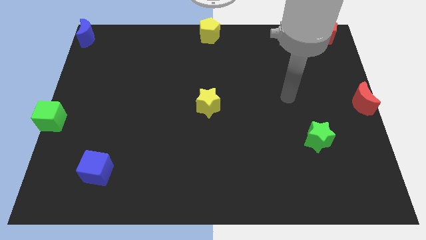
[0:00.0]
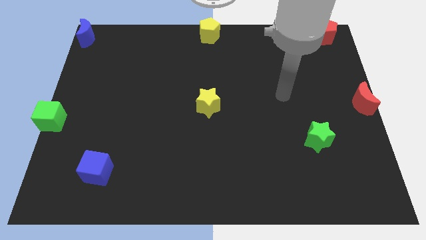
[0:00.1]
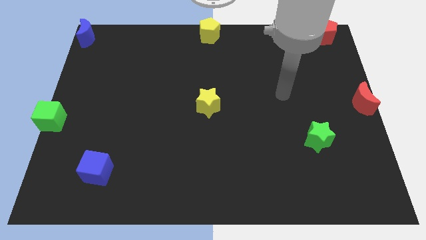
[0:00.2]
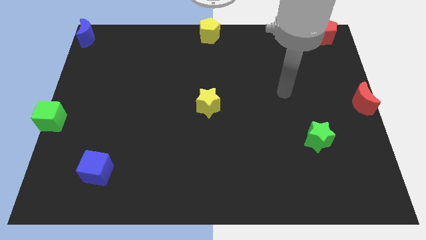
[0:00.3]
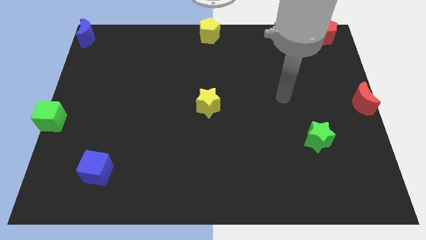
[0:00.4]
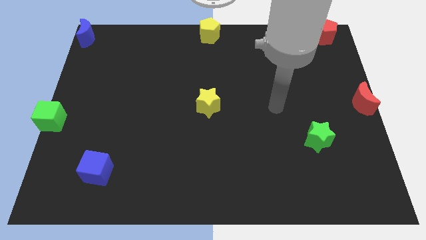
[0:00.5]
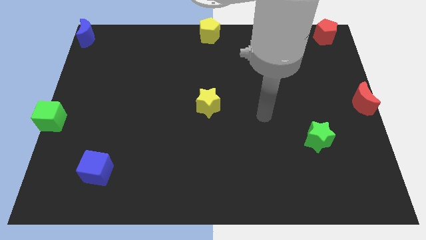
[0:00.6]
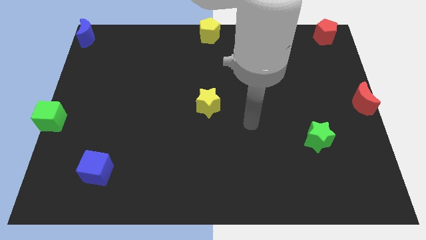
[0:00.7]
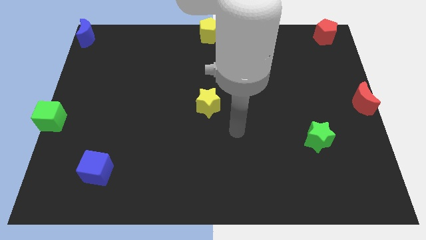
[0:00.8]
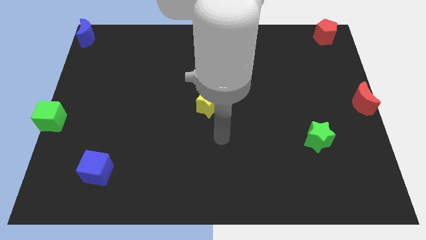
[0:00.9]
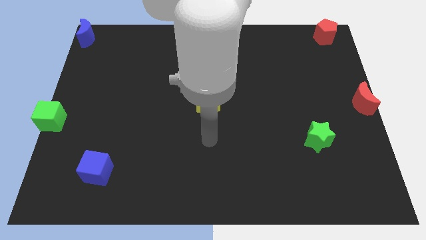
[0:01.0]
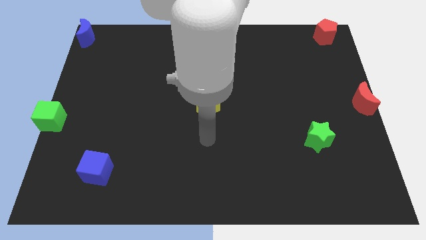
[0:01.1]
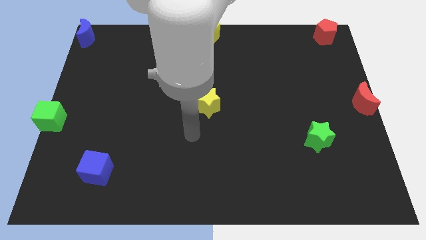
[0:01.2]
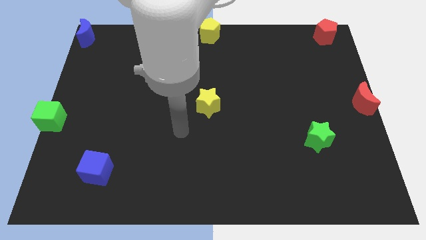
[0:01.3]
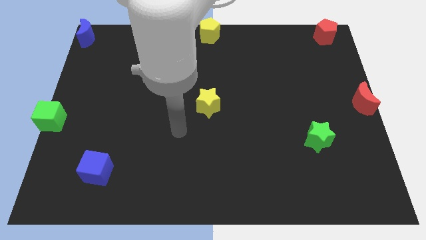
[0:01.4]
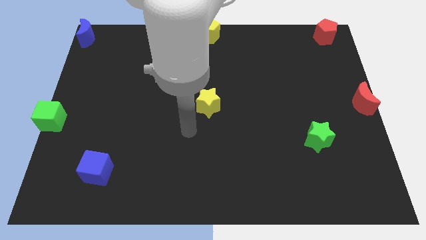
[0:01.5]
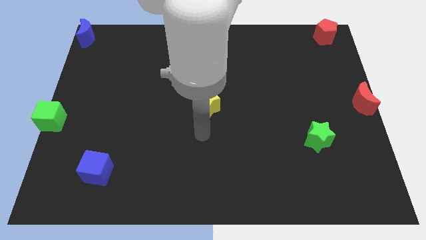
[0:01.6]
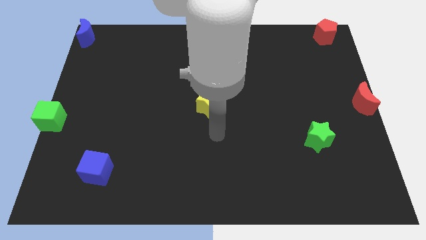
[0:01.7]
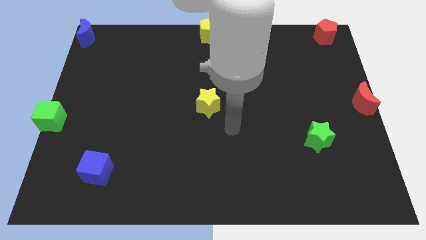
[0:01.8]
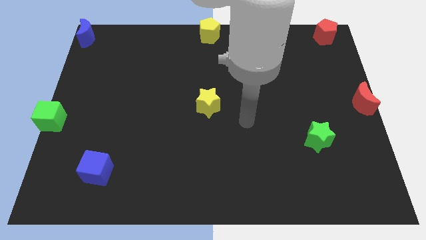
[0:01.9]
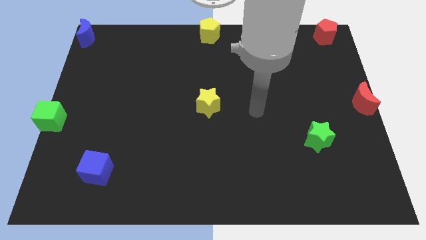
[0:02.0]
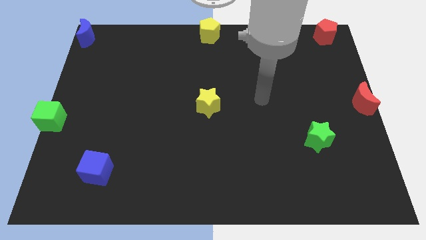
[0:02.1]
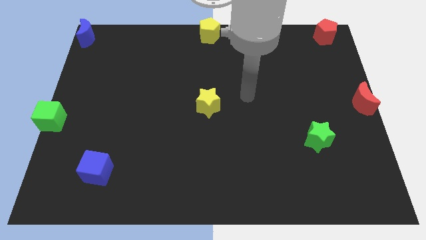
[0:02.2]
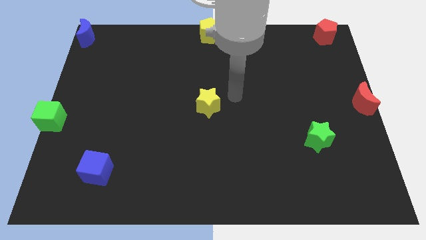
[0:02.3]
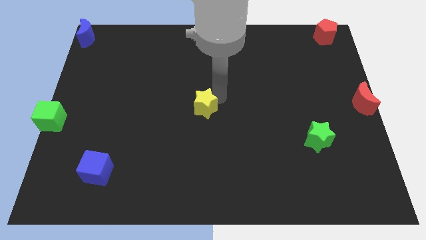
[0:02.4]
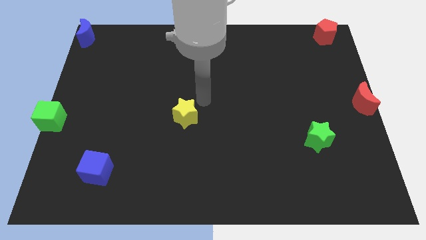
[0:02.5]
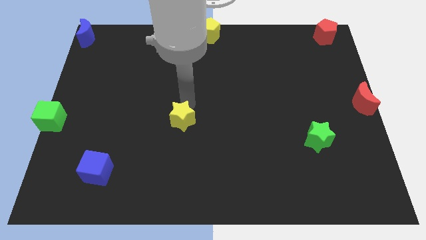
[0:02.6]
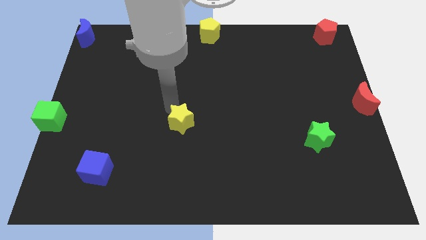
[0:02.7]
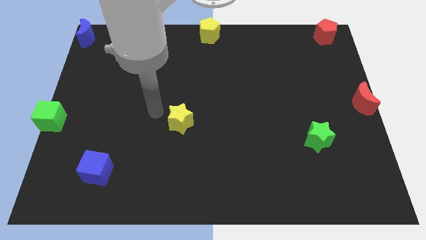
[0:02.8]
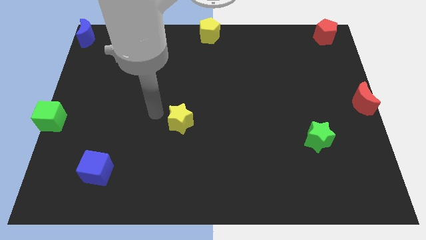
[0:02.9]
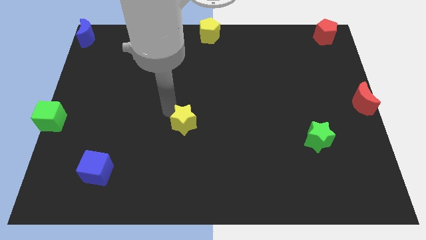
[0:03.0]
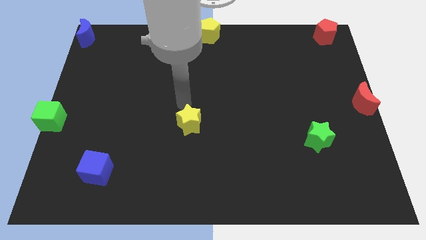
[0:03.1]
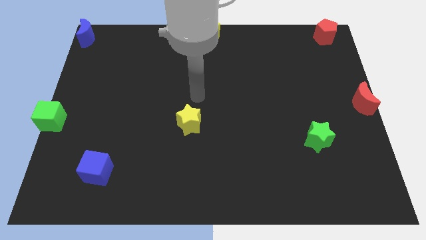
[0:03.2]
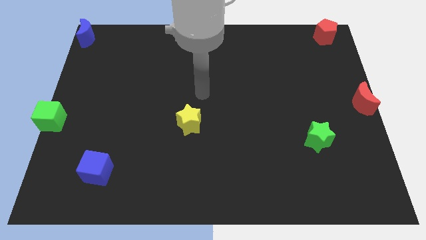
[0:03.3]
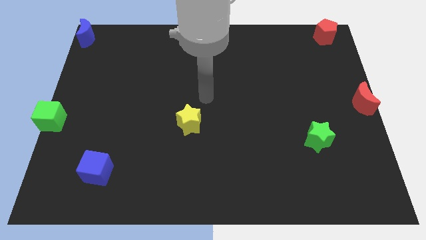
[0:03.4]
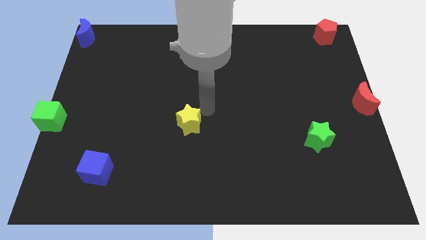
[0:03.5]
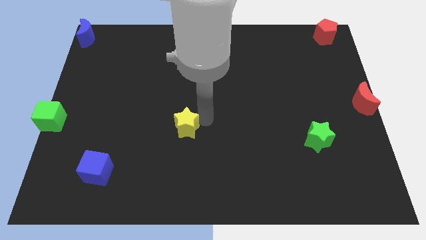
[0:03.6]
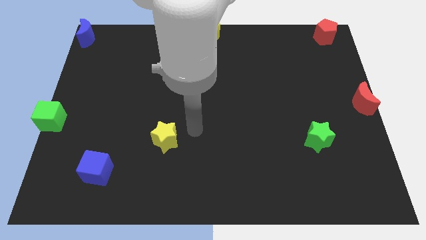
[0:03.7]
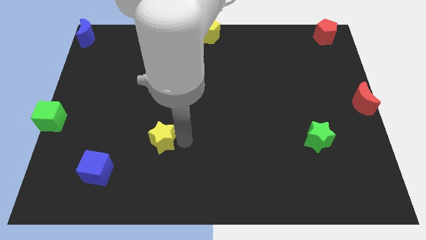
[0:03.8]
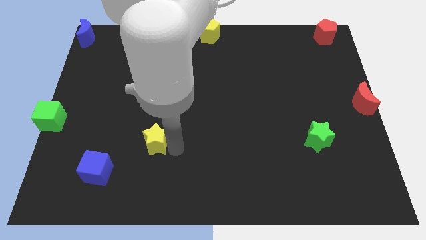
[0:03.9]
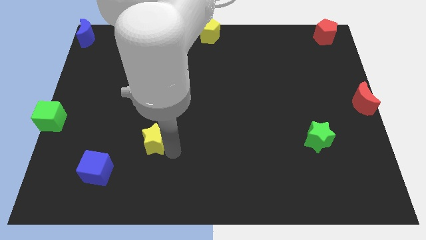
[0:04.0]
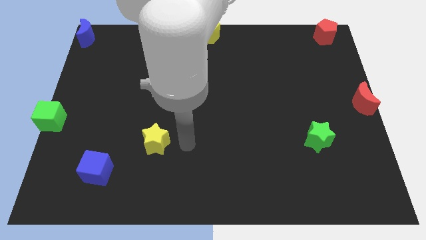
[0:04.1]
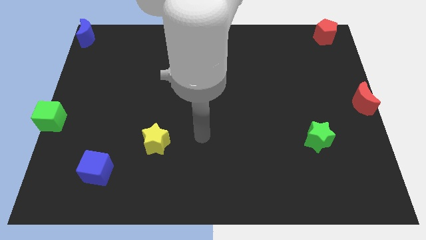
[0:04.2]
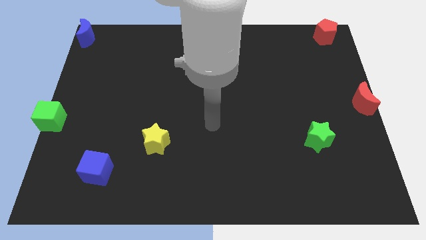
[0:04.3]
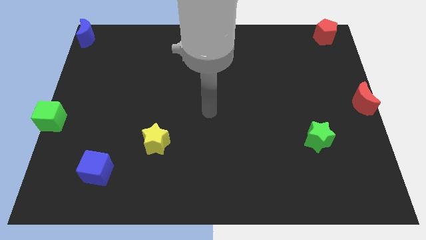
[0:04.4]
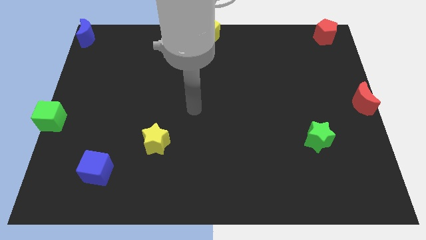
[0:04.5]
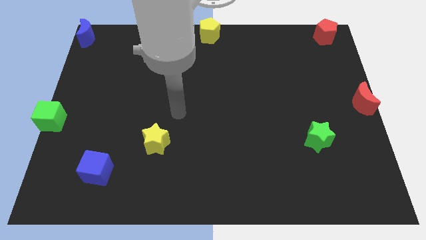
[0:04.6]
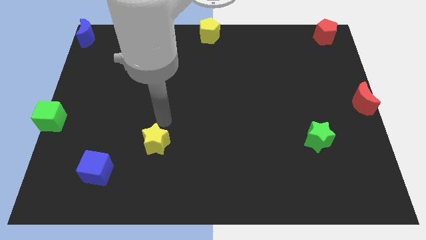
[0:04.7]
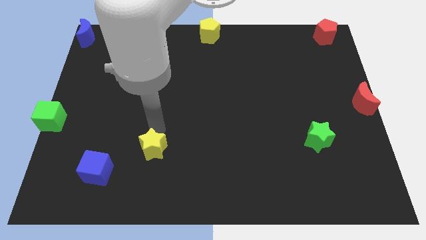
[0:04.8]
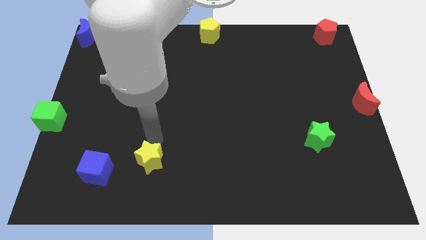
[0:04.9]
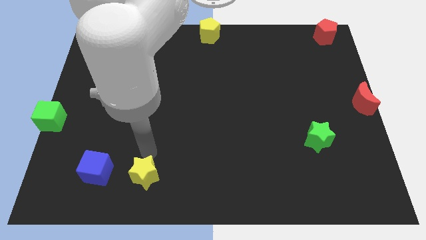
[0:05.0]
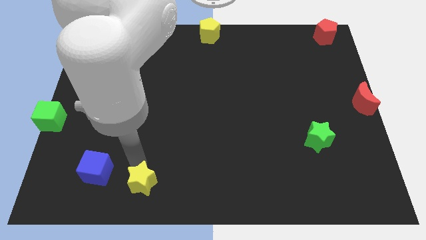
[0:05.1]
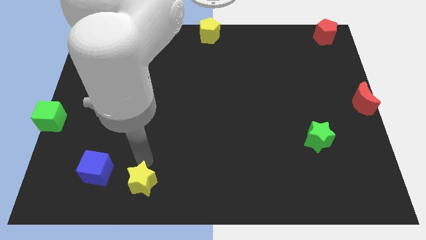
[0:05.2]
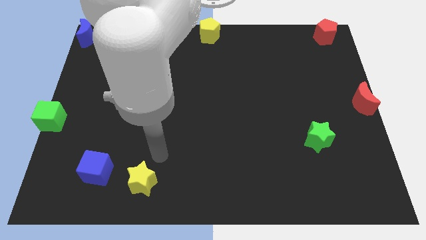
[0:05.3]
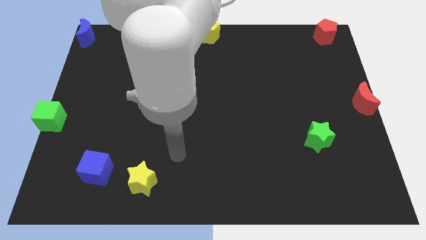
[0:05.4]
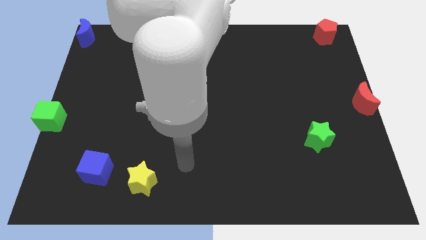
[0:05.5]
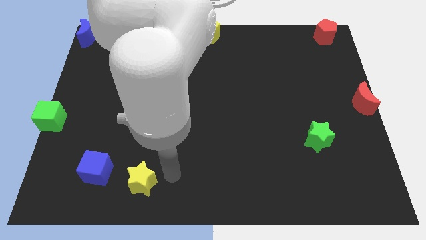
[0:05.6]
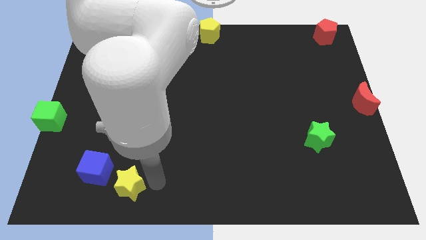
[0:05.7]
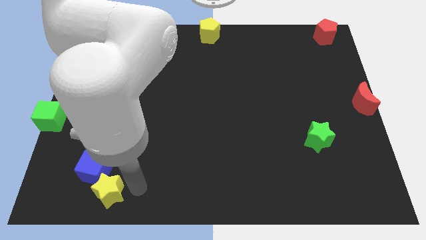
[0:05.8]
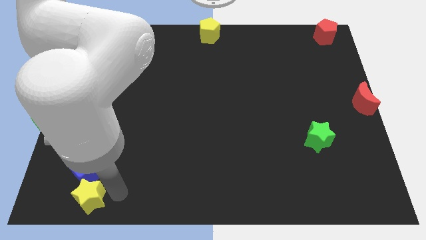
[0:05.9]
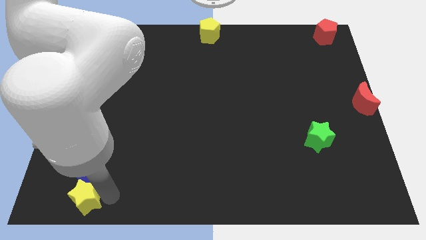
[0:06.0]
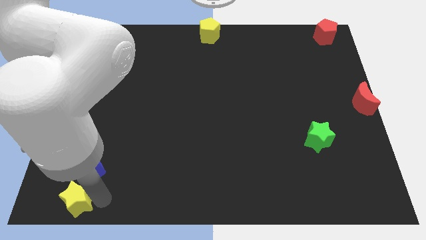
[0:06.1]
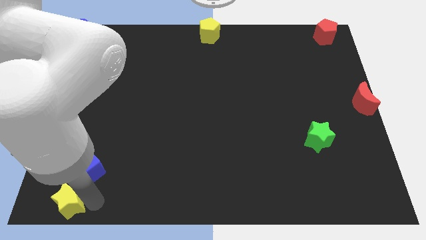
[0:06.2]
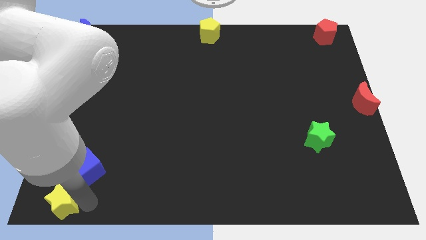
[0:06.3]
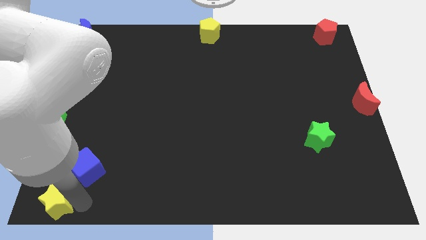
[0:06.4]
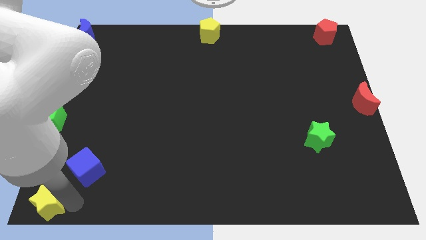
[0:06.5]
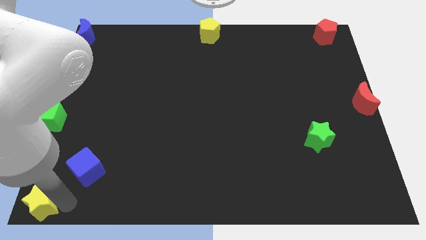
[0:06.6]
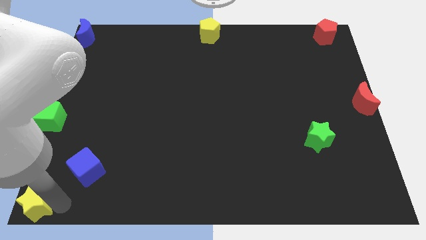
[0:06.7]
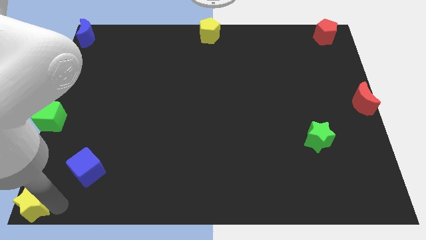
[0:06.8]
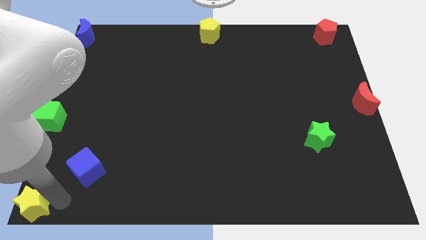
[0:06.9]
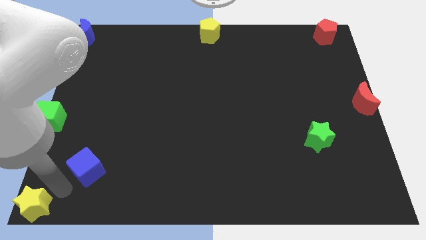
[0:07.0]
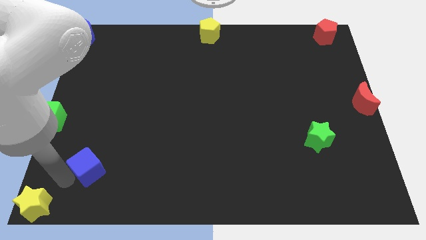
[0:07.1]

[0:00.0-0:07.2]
move the yellow star to the bottom left corner of the board

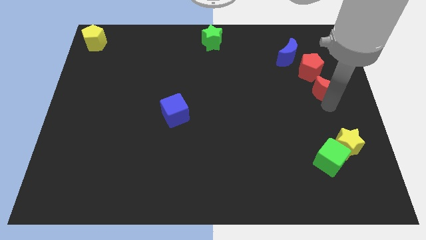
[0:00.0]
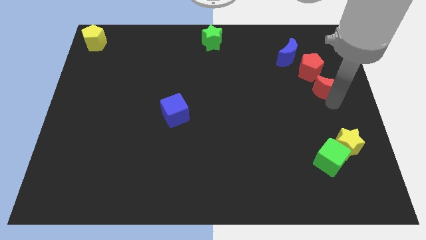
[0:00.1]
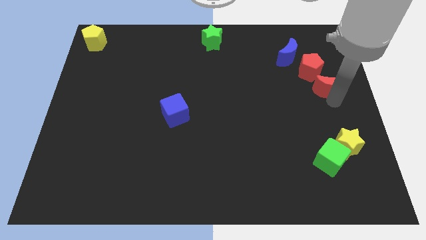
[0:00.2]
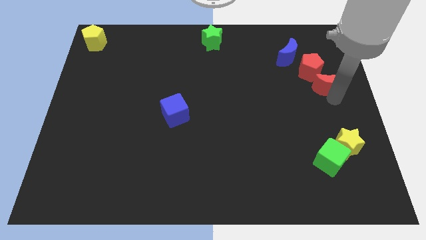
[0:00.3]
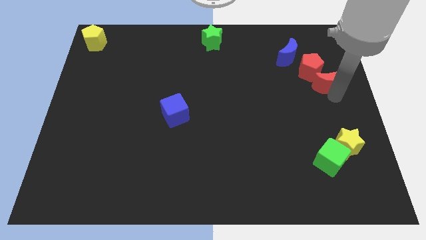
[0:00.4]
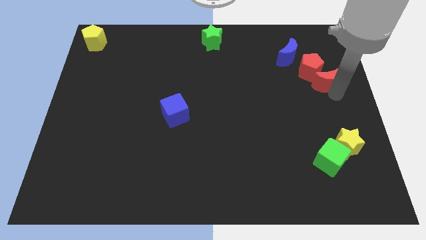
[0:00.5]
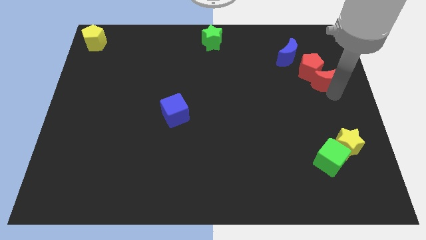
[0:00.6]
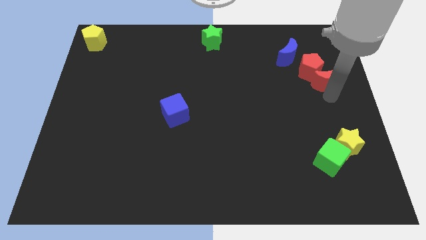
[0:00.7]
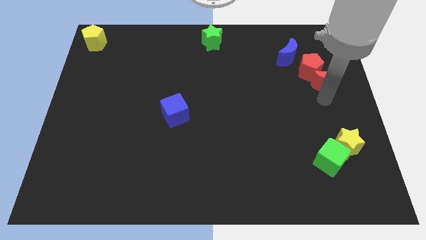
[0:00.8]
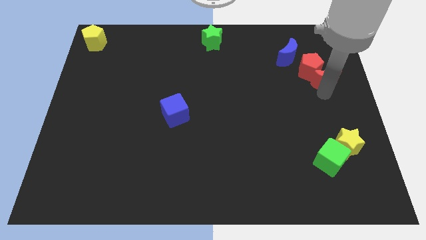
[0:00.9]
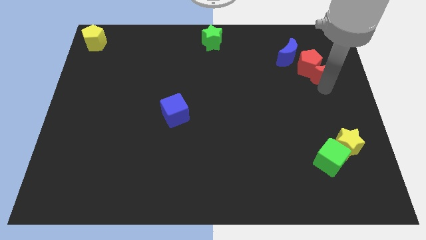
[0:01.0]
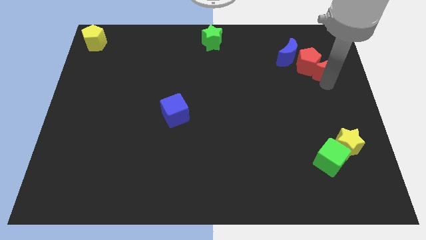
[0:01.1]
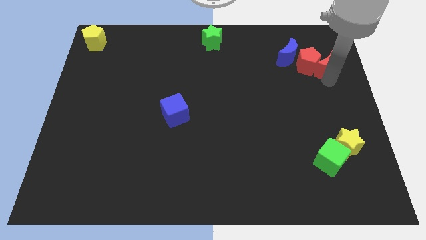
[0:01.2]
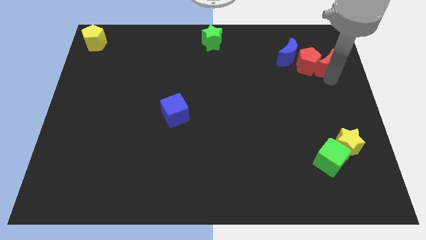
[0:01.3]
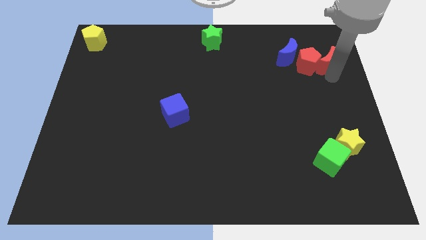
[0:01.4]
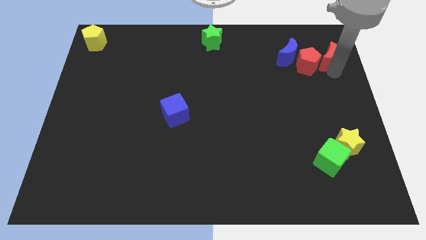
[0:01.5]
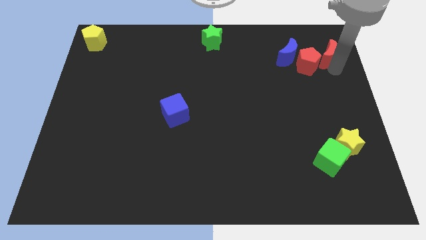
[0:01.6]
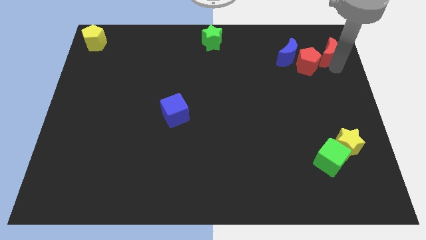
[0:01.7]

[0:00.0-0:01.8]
move red moon to the right of the red pentagon
